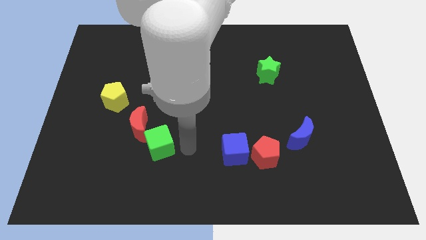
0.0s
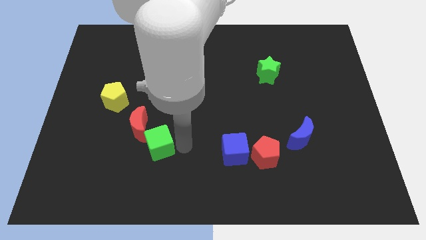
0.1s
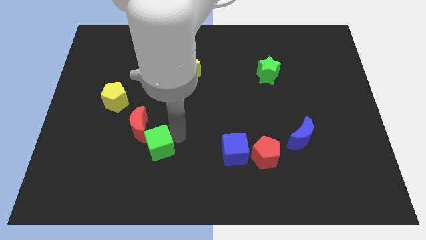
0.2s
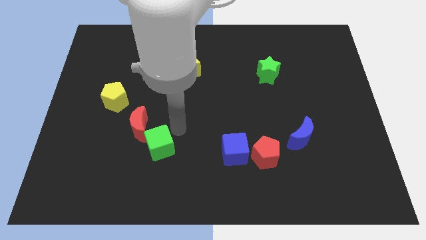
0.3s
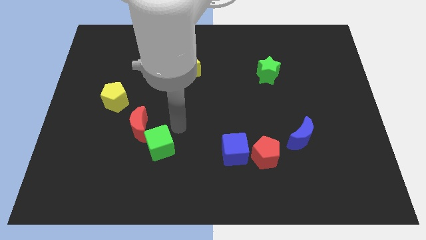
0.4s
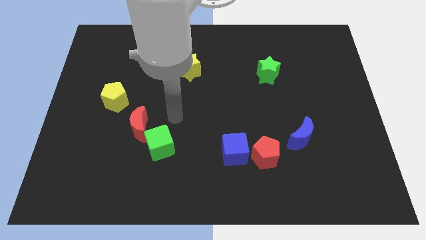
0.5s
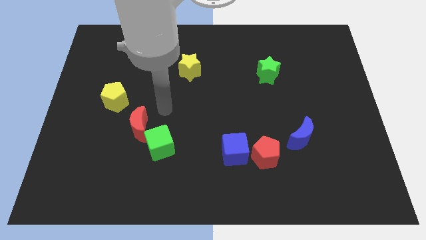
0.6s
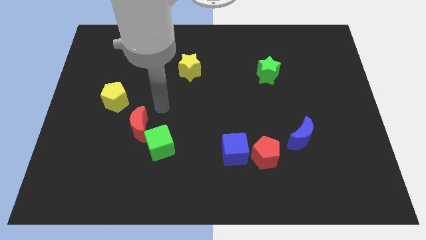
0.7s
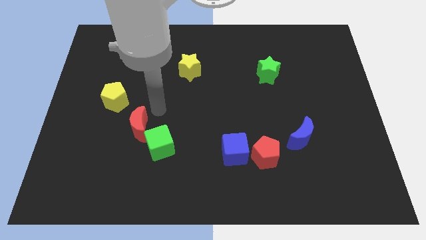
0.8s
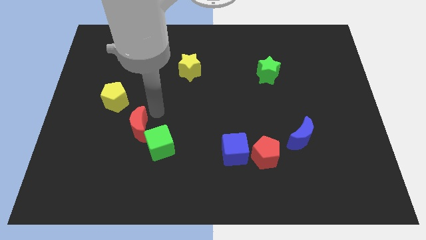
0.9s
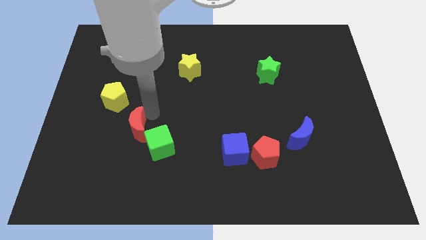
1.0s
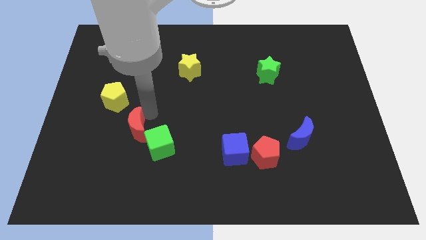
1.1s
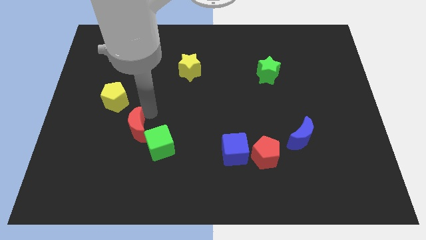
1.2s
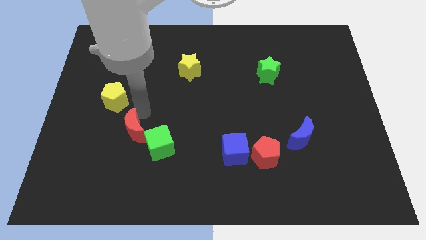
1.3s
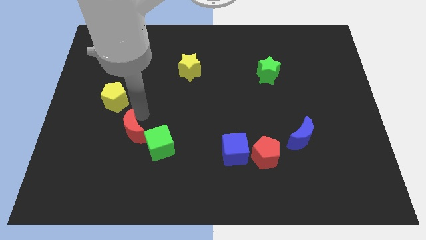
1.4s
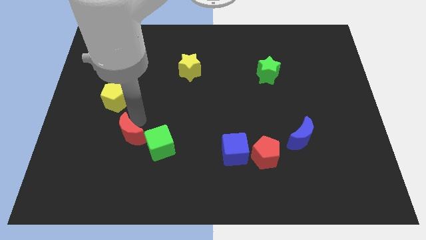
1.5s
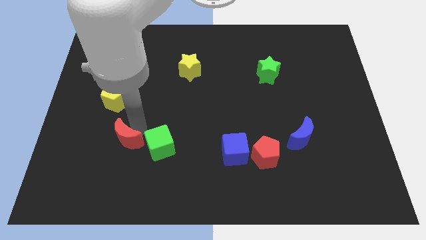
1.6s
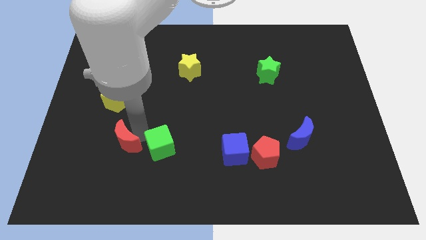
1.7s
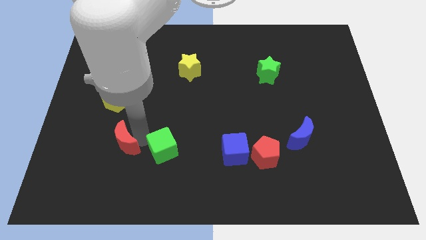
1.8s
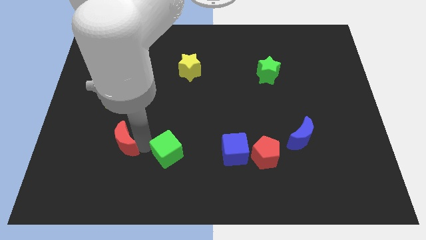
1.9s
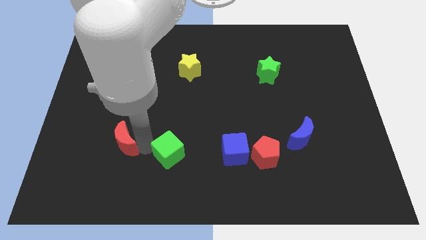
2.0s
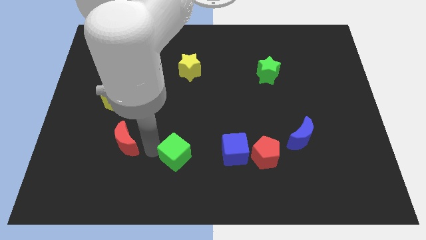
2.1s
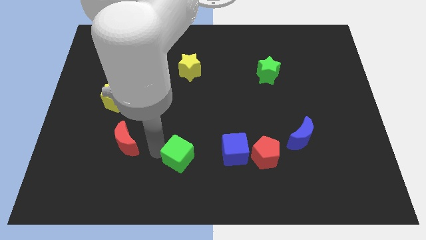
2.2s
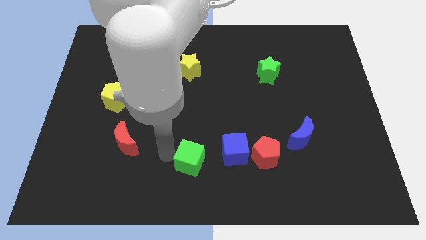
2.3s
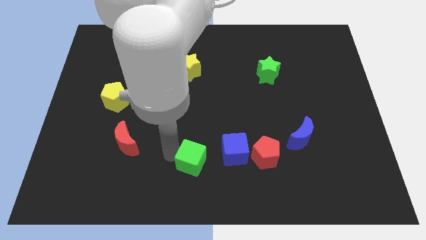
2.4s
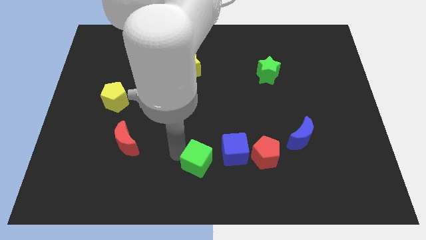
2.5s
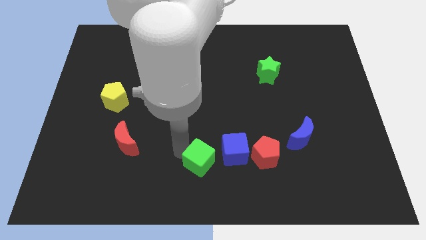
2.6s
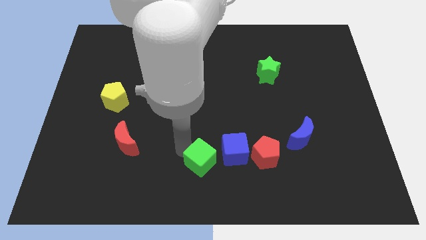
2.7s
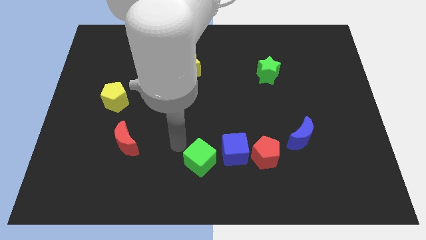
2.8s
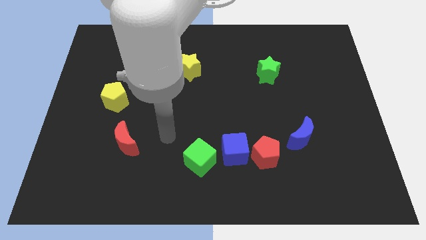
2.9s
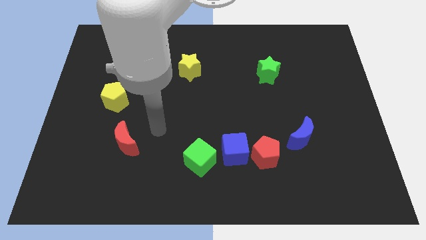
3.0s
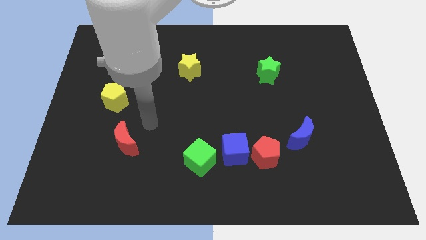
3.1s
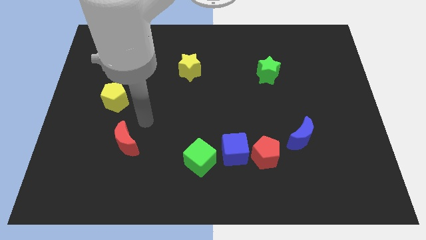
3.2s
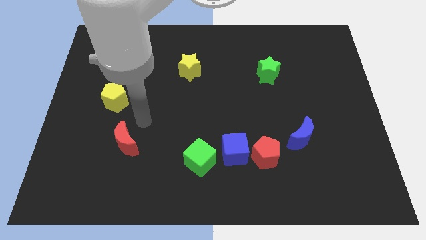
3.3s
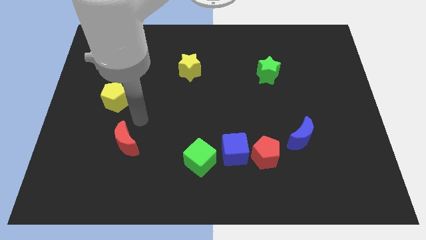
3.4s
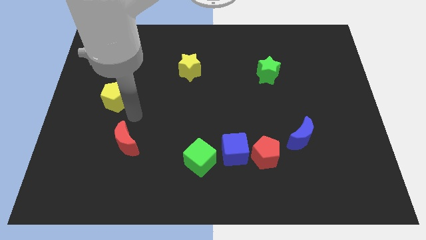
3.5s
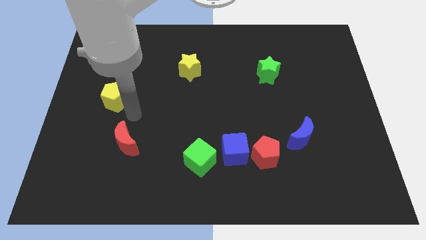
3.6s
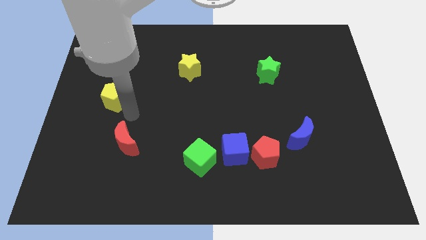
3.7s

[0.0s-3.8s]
separate the green cube and the red crescent

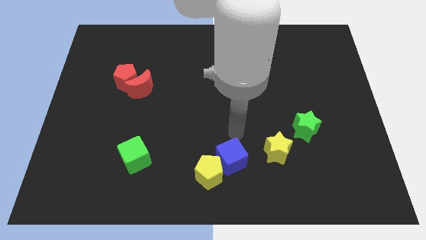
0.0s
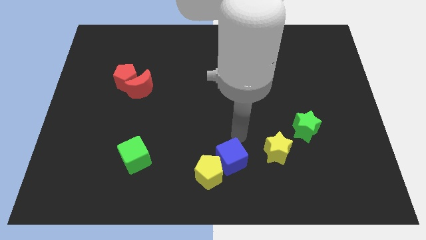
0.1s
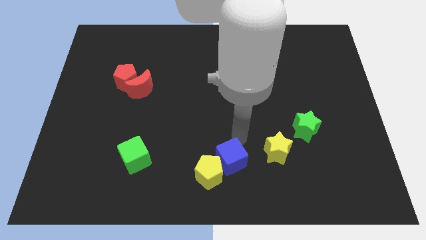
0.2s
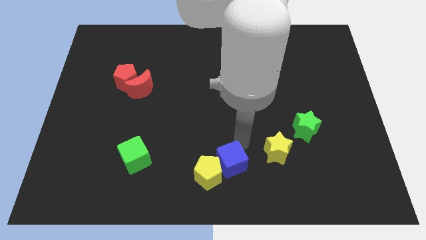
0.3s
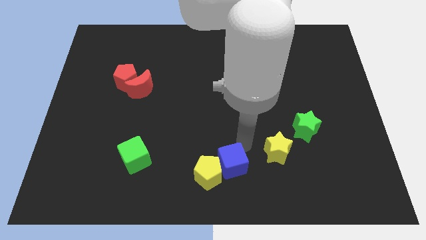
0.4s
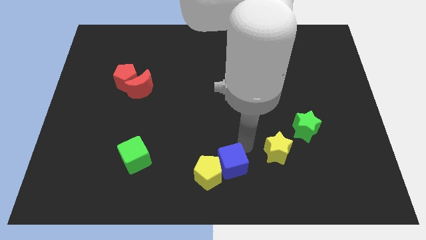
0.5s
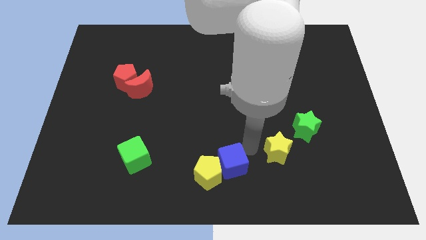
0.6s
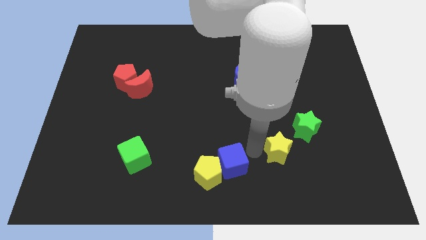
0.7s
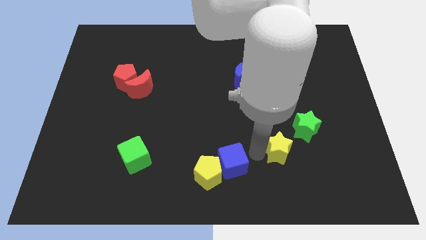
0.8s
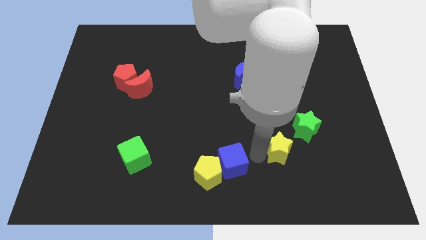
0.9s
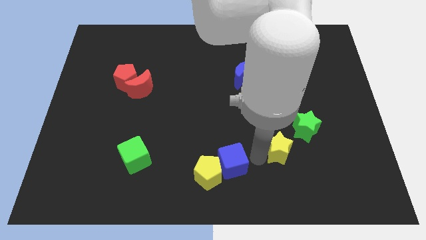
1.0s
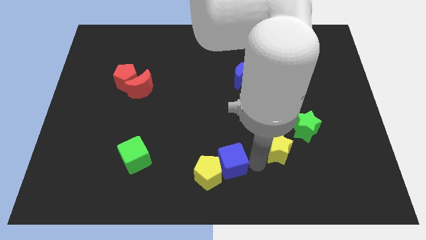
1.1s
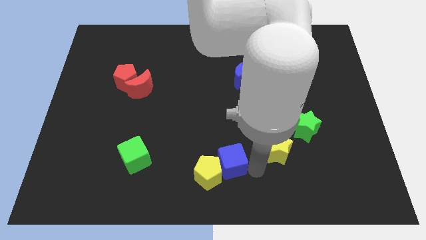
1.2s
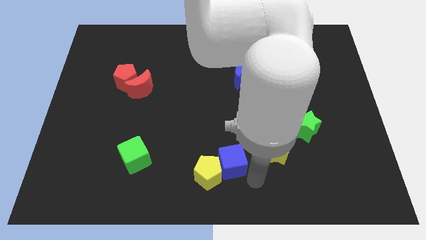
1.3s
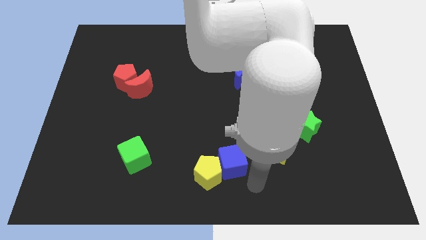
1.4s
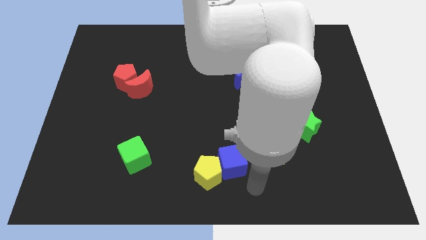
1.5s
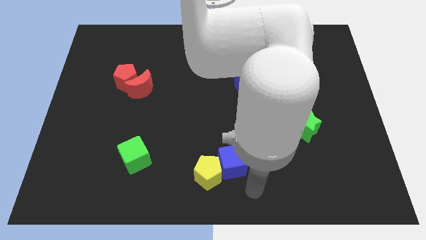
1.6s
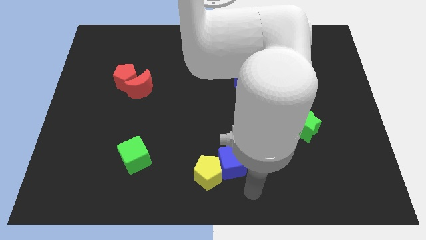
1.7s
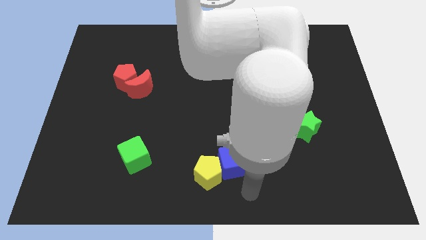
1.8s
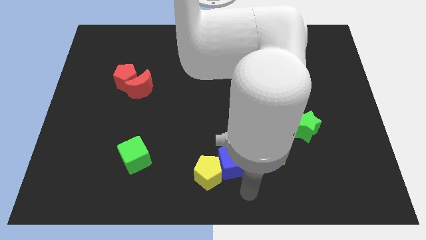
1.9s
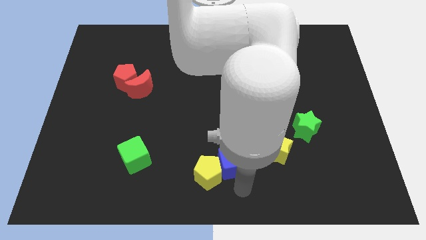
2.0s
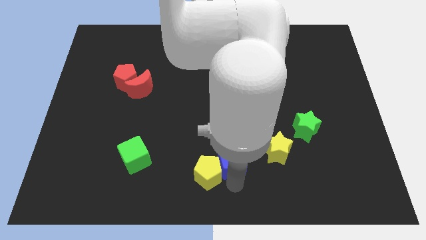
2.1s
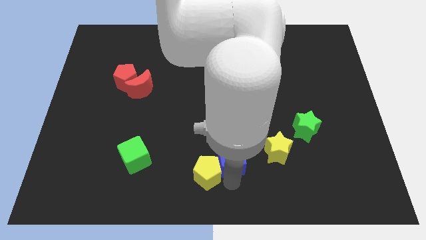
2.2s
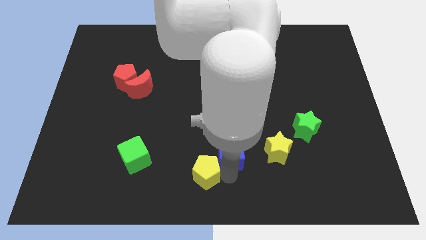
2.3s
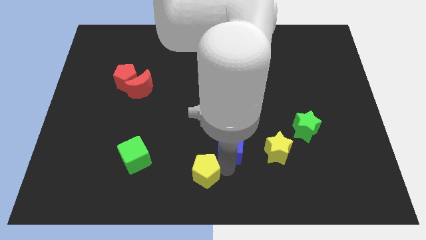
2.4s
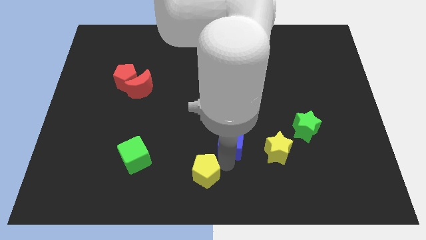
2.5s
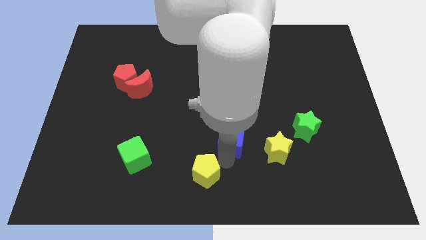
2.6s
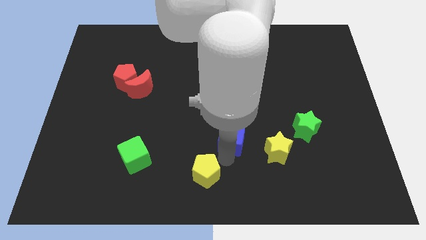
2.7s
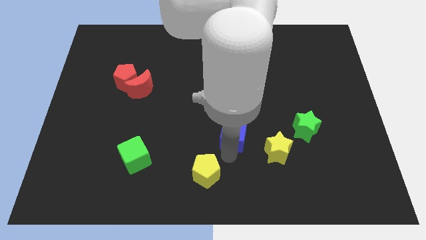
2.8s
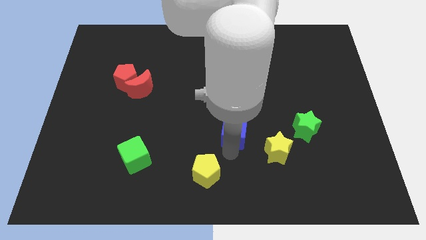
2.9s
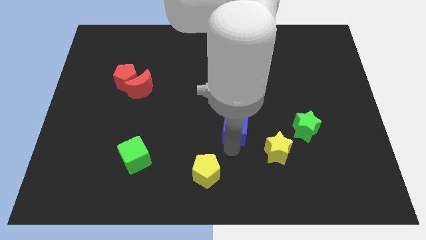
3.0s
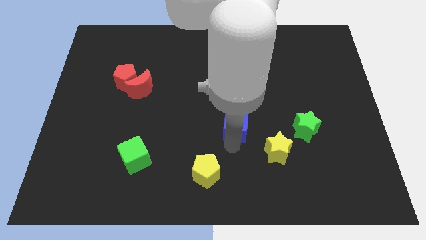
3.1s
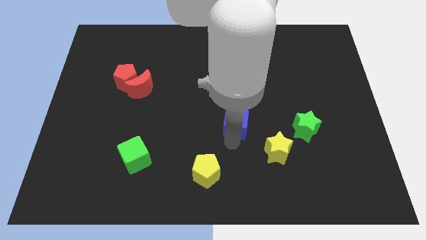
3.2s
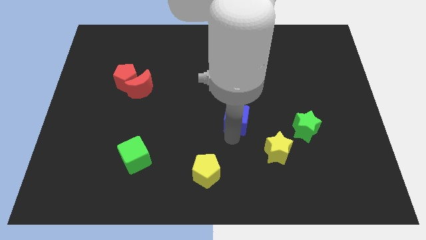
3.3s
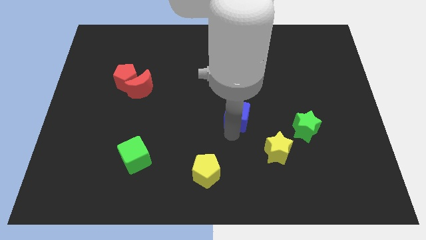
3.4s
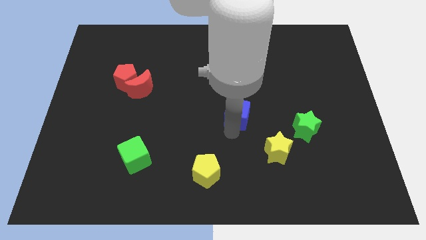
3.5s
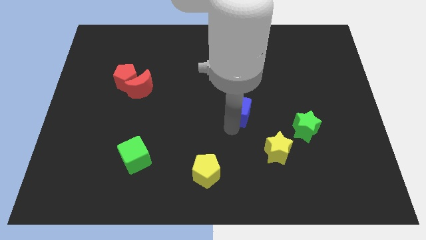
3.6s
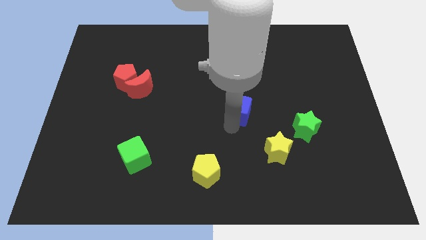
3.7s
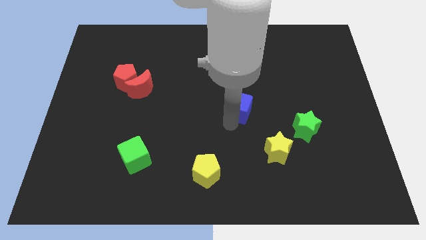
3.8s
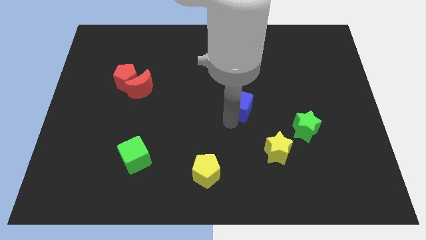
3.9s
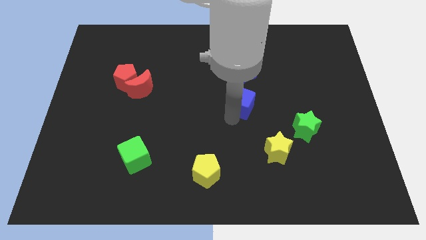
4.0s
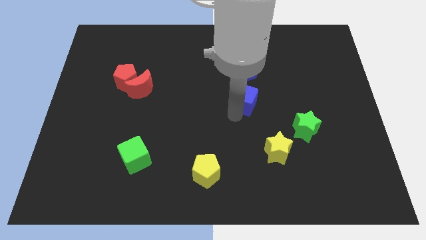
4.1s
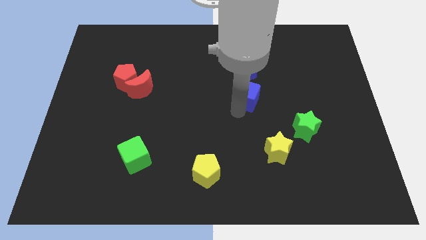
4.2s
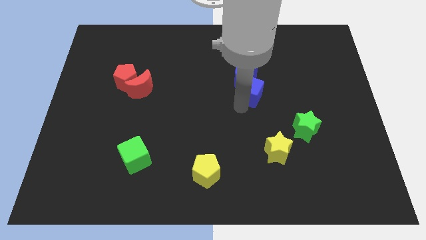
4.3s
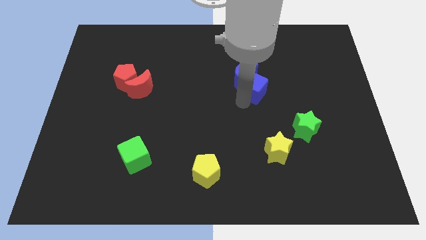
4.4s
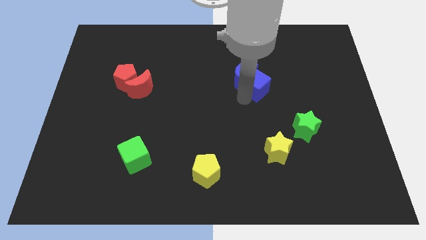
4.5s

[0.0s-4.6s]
place the blue cube diagonally to the blue moon

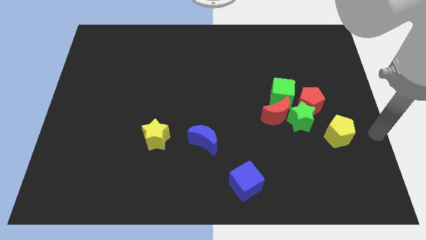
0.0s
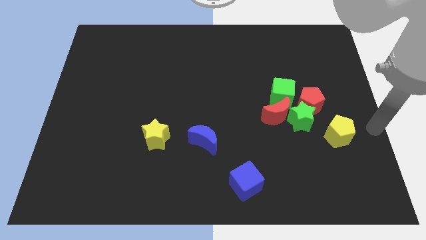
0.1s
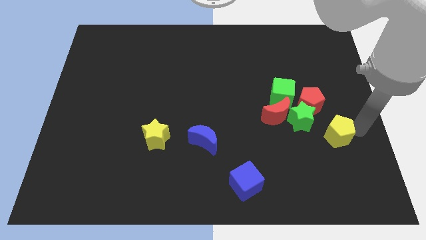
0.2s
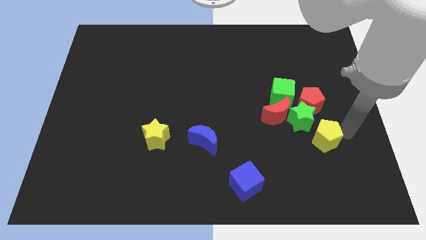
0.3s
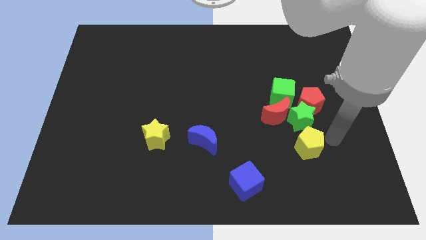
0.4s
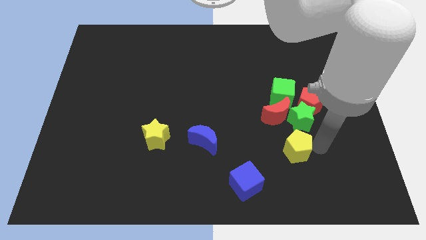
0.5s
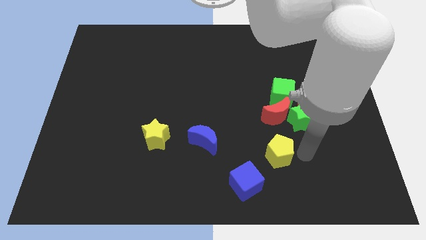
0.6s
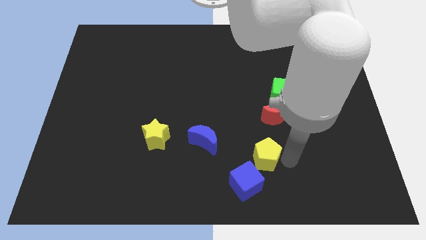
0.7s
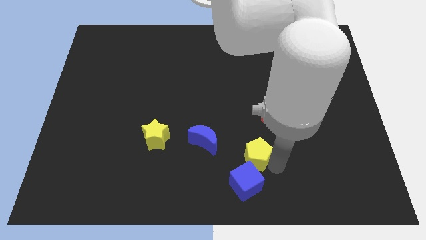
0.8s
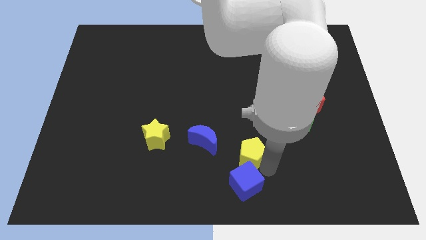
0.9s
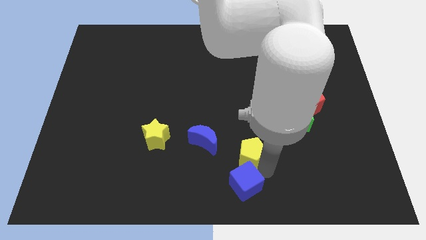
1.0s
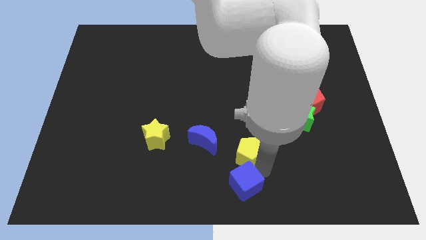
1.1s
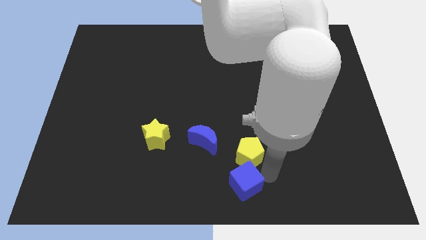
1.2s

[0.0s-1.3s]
put the yellow pentagon vertically above the blue cube
